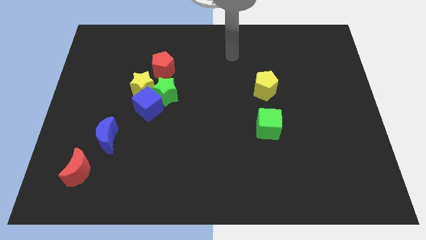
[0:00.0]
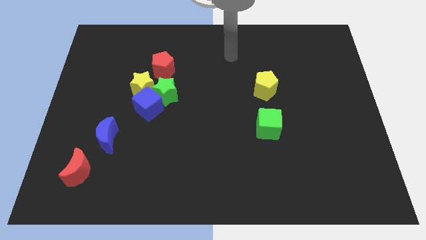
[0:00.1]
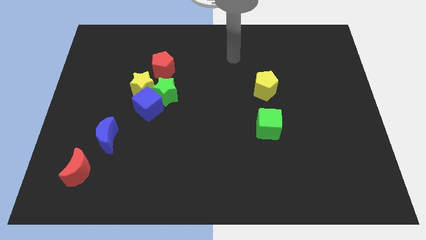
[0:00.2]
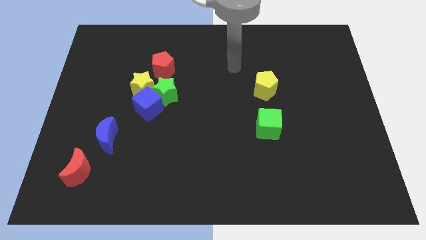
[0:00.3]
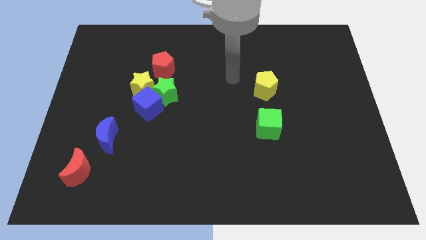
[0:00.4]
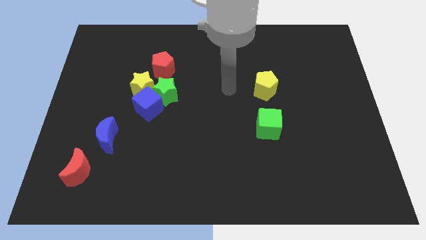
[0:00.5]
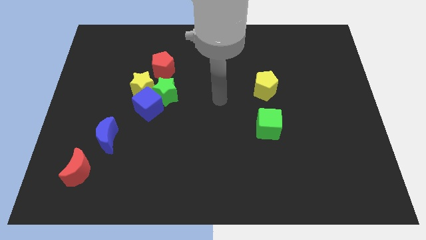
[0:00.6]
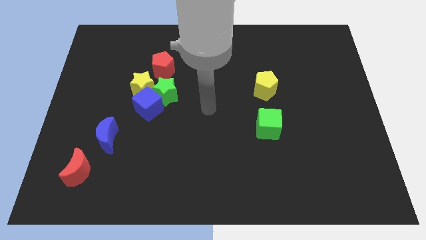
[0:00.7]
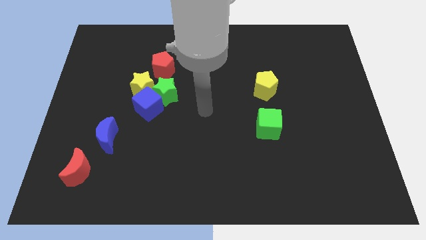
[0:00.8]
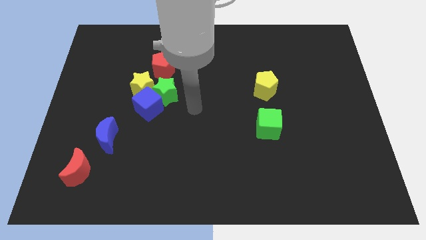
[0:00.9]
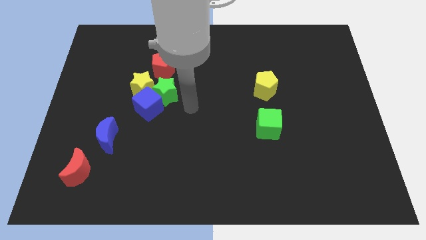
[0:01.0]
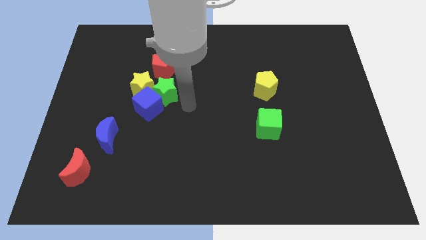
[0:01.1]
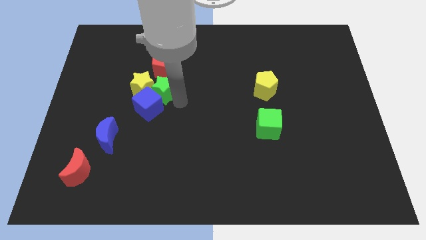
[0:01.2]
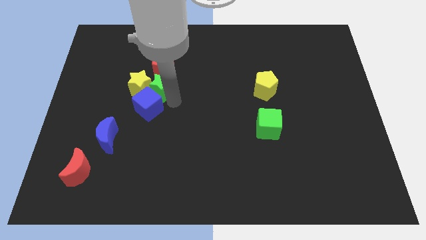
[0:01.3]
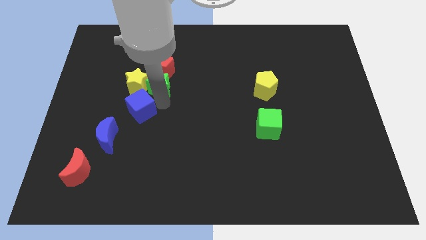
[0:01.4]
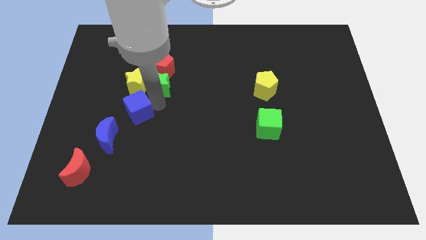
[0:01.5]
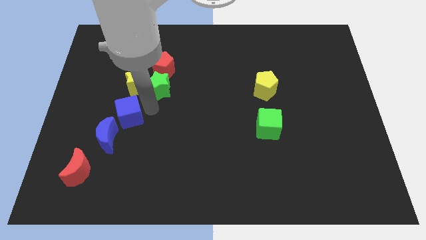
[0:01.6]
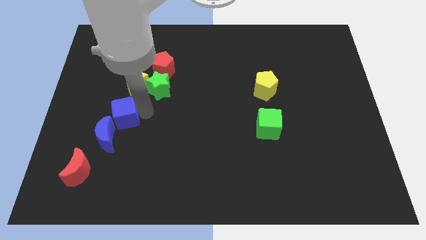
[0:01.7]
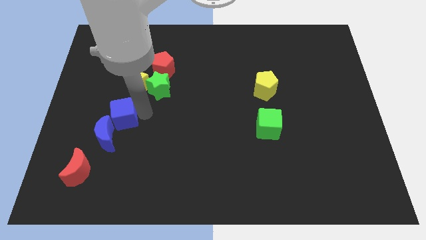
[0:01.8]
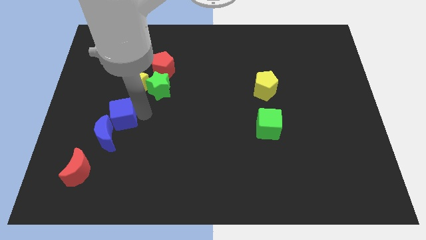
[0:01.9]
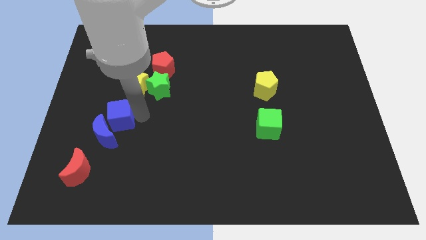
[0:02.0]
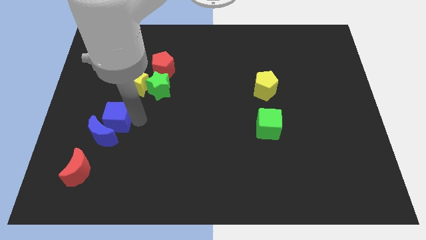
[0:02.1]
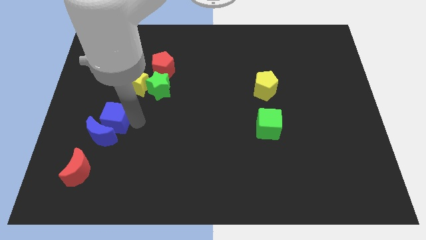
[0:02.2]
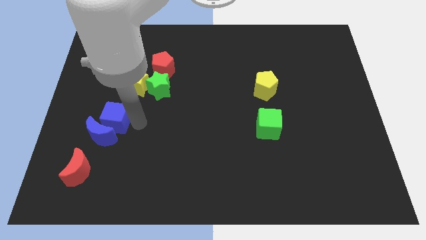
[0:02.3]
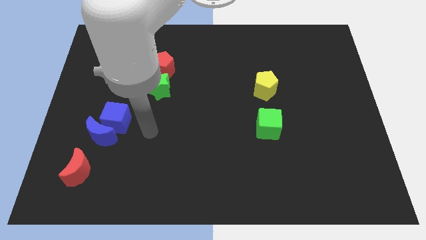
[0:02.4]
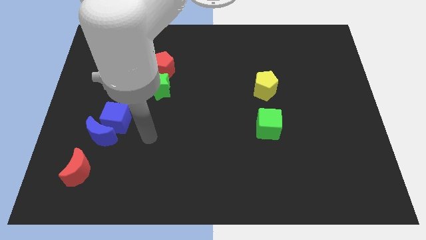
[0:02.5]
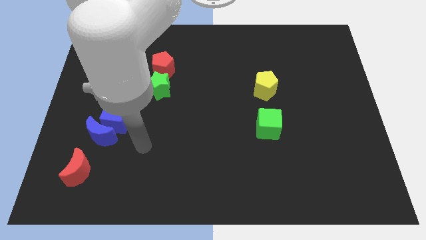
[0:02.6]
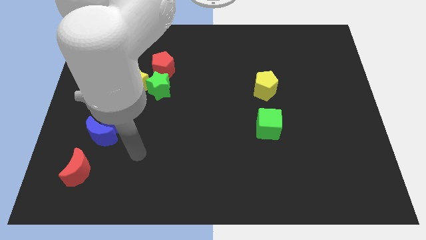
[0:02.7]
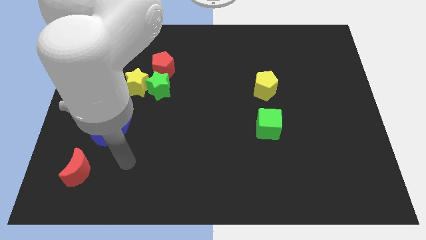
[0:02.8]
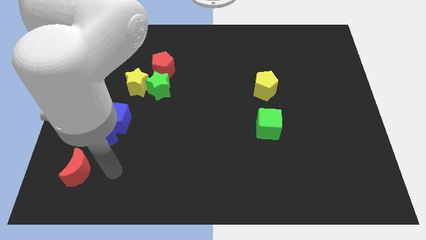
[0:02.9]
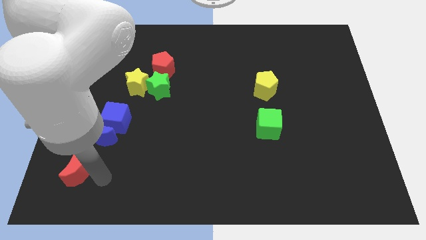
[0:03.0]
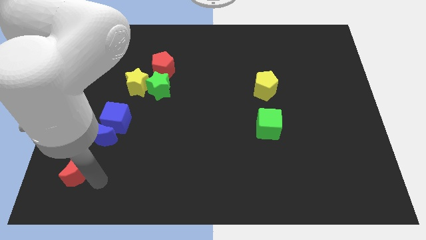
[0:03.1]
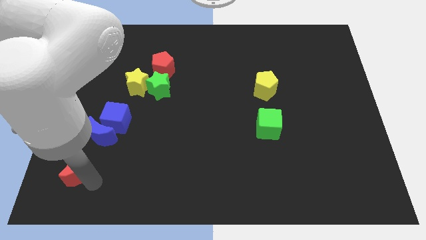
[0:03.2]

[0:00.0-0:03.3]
move the blue cube into the blue crescent

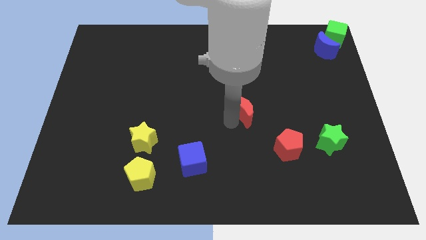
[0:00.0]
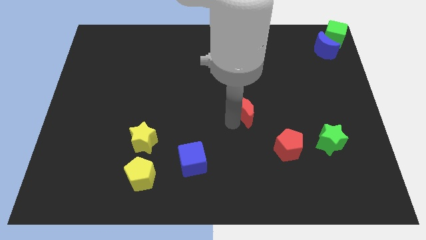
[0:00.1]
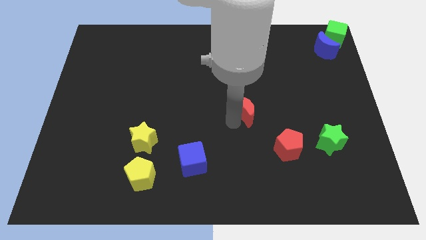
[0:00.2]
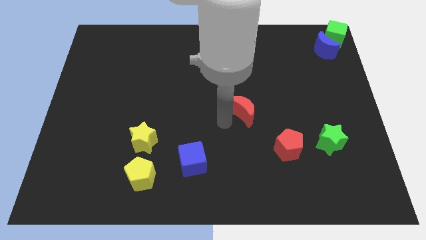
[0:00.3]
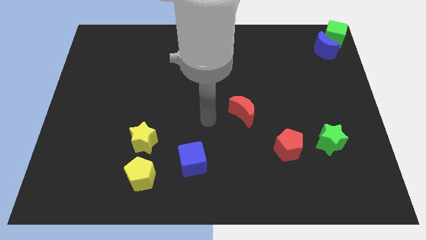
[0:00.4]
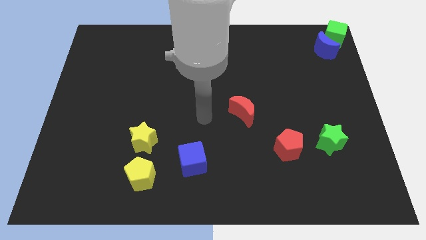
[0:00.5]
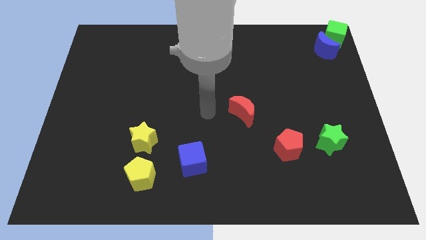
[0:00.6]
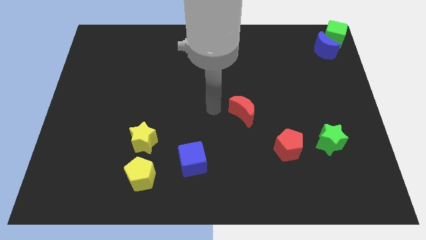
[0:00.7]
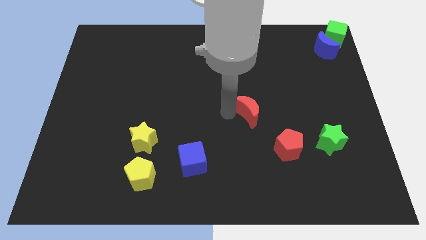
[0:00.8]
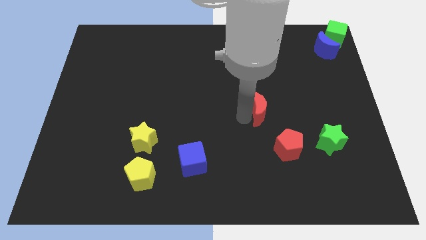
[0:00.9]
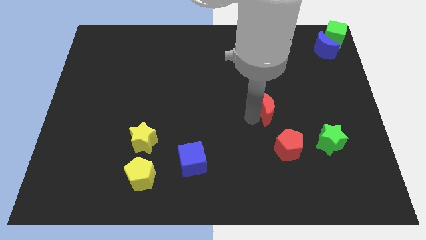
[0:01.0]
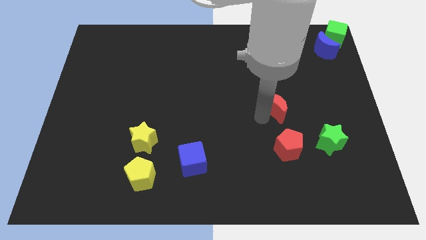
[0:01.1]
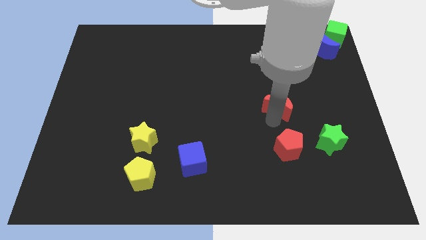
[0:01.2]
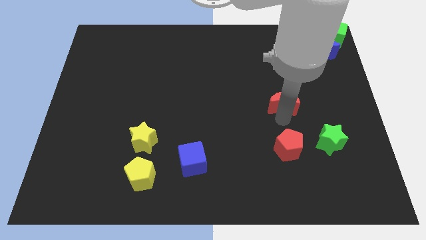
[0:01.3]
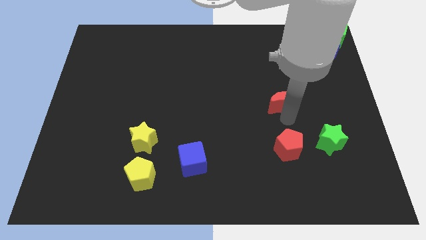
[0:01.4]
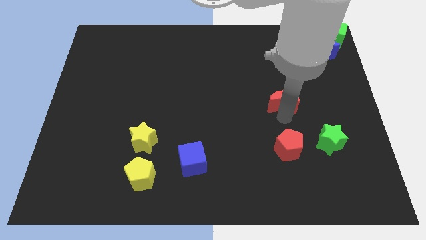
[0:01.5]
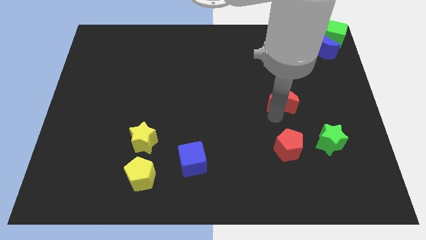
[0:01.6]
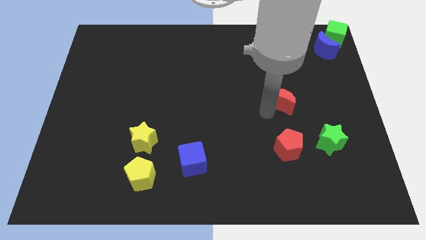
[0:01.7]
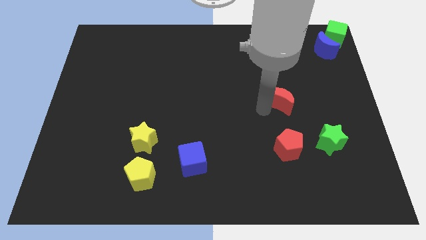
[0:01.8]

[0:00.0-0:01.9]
place the red moon vertically above the red pentagon

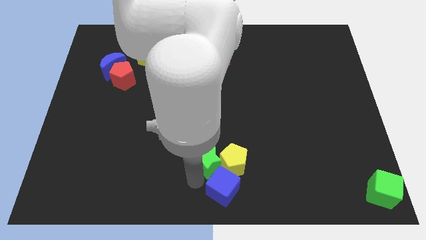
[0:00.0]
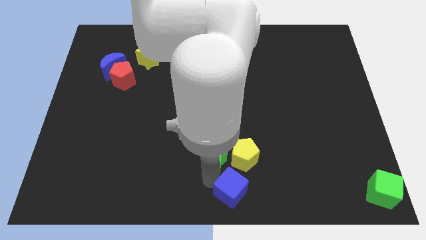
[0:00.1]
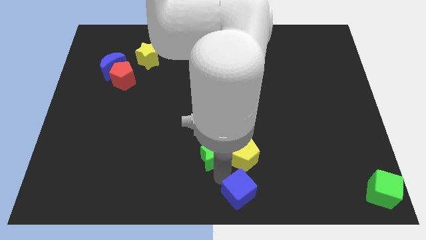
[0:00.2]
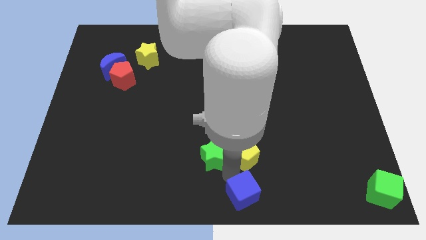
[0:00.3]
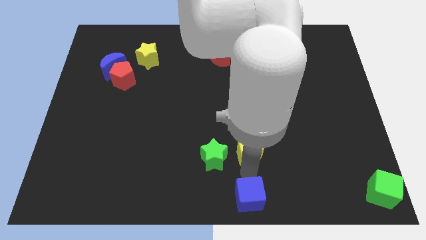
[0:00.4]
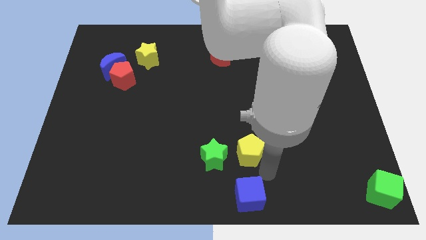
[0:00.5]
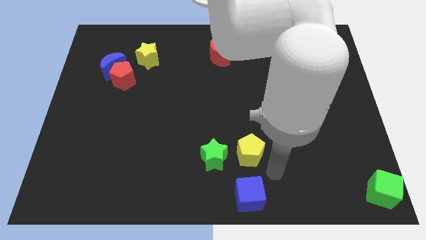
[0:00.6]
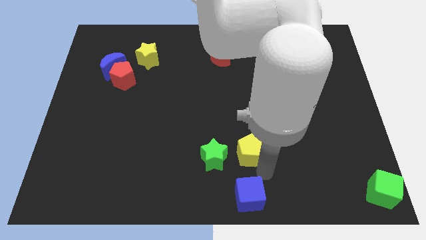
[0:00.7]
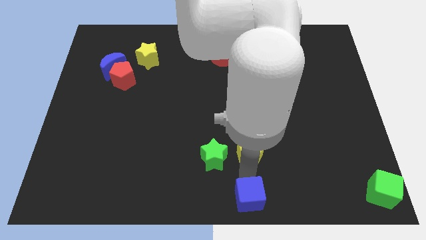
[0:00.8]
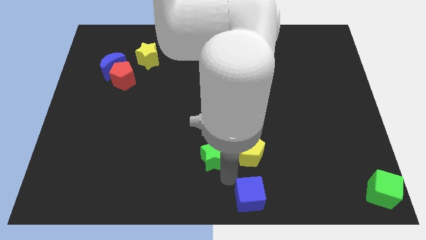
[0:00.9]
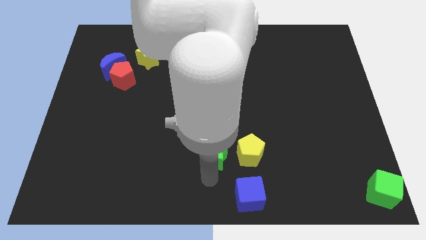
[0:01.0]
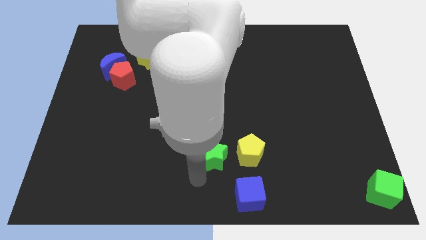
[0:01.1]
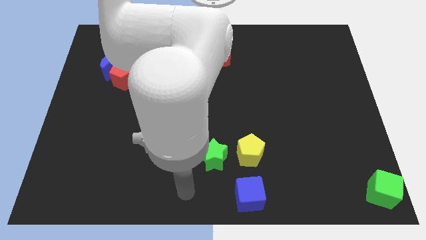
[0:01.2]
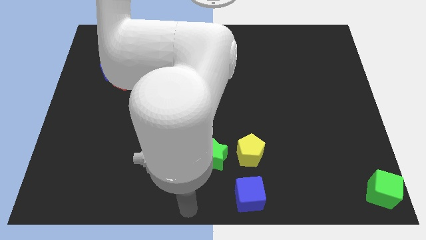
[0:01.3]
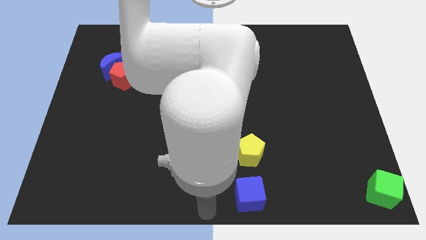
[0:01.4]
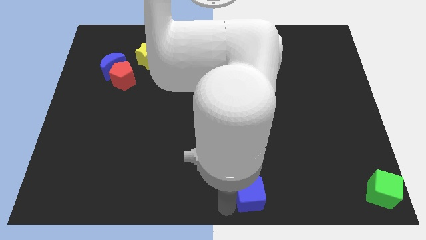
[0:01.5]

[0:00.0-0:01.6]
separate the blue cube and the yellow pentagon

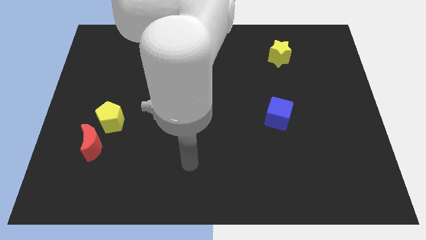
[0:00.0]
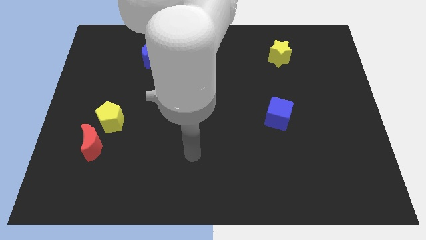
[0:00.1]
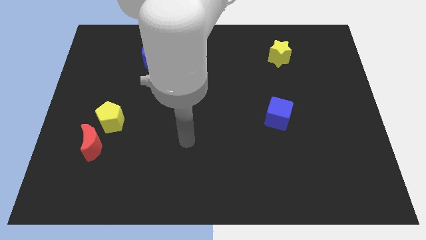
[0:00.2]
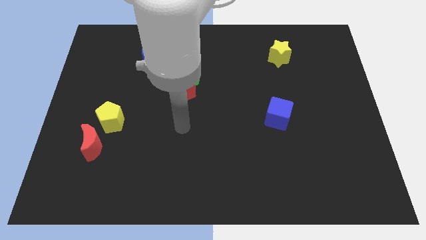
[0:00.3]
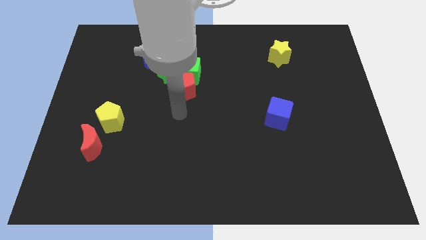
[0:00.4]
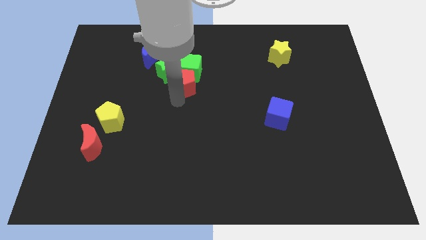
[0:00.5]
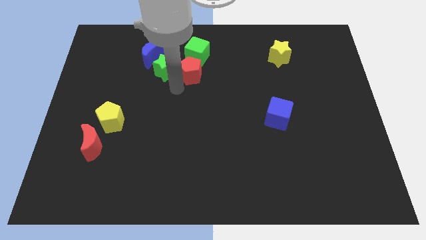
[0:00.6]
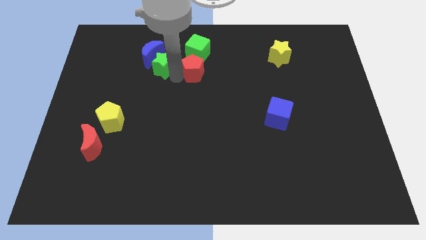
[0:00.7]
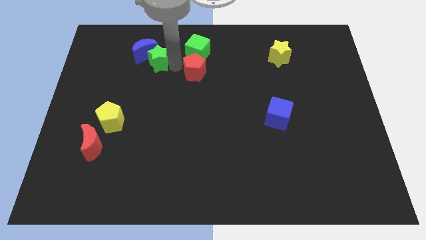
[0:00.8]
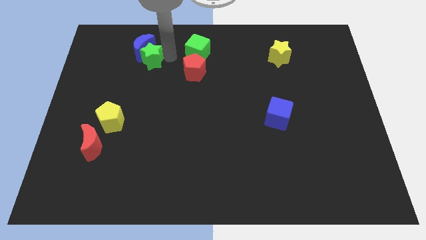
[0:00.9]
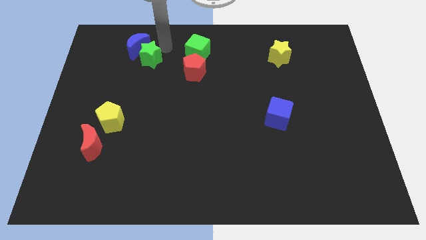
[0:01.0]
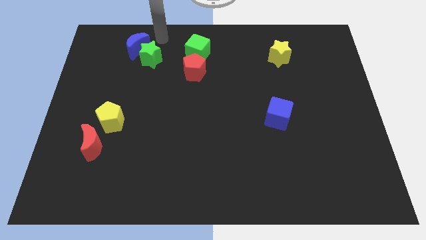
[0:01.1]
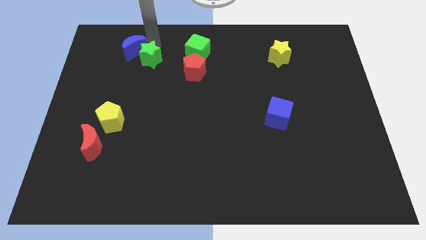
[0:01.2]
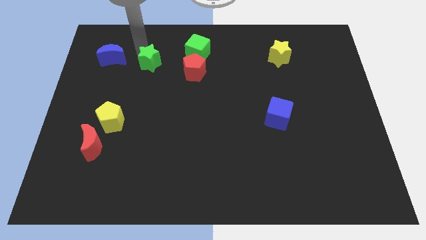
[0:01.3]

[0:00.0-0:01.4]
place your arm to the top of green star

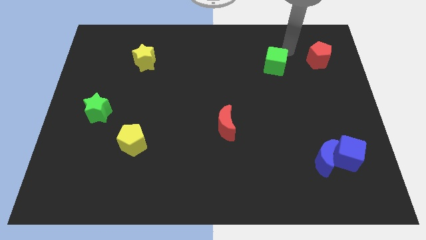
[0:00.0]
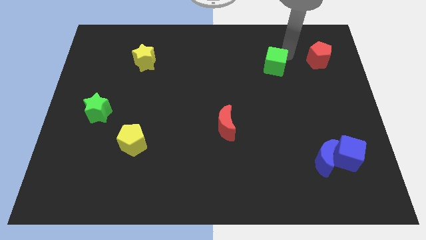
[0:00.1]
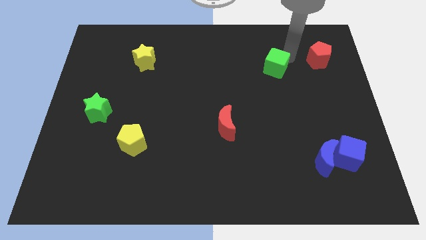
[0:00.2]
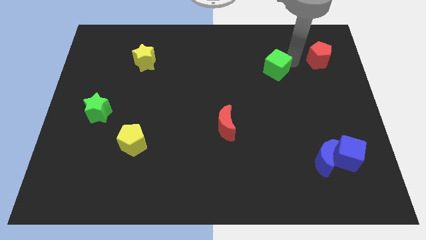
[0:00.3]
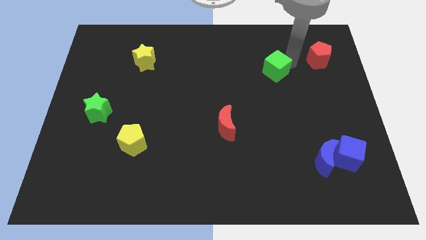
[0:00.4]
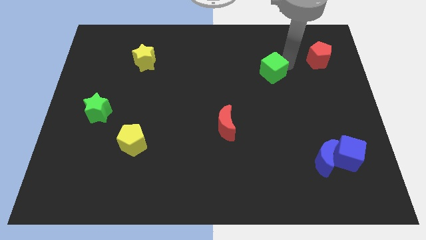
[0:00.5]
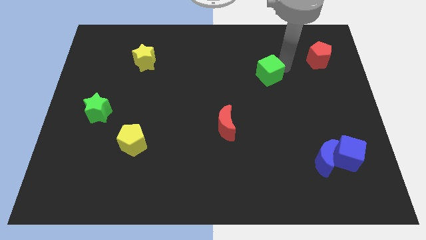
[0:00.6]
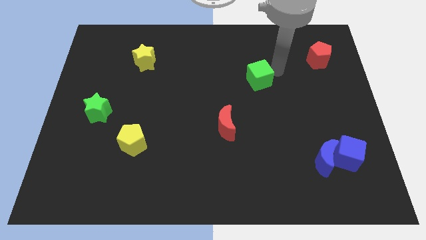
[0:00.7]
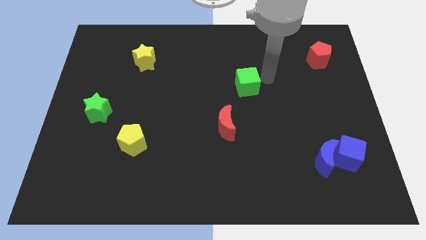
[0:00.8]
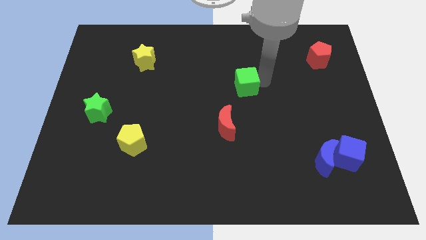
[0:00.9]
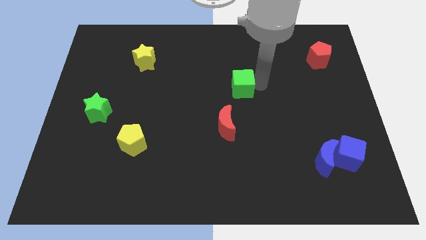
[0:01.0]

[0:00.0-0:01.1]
move the green cube towards the red crescent
